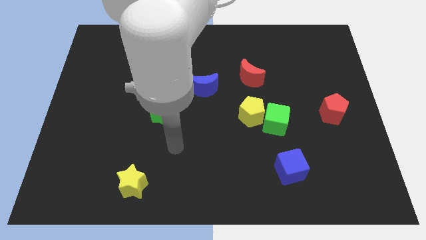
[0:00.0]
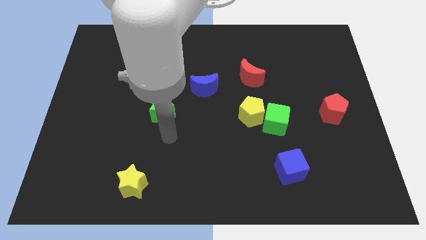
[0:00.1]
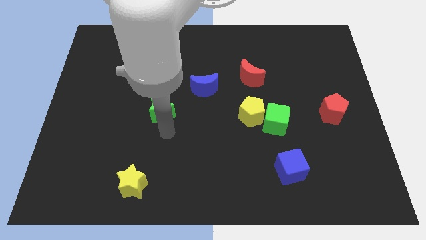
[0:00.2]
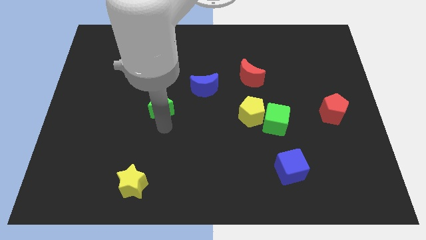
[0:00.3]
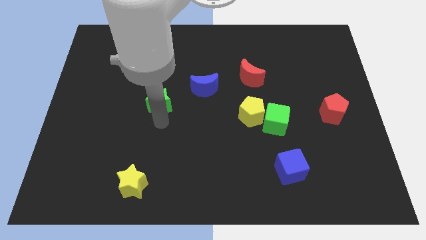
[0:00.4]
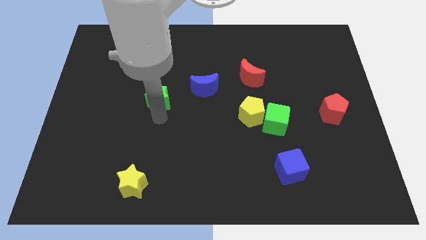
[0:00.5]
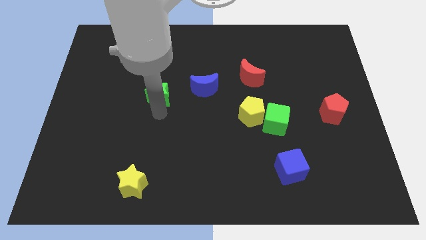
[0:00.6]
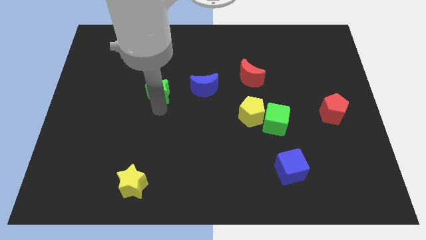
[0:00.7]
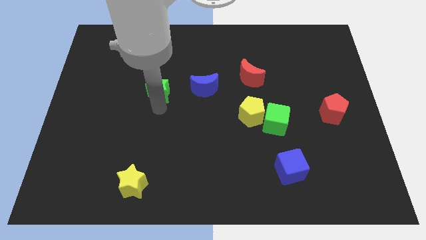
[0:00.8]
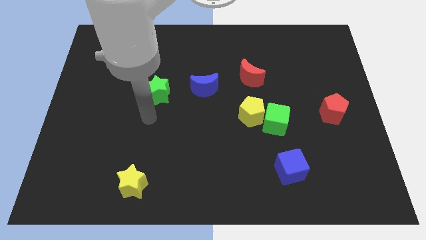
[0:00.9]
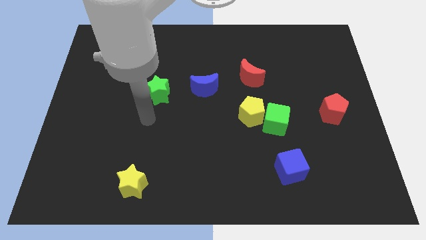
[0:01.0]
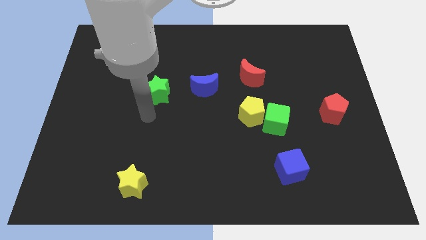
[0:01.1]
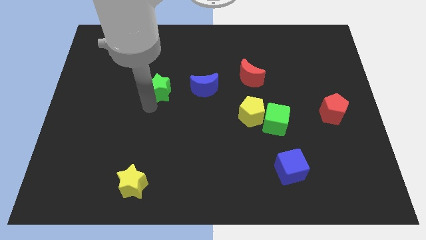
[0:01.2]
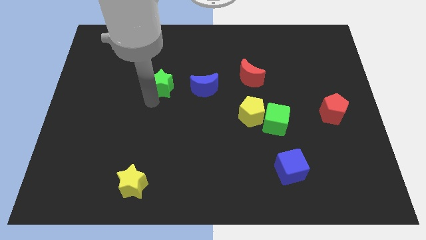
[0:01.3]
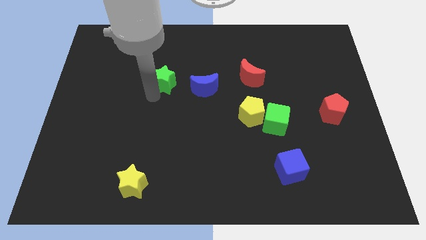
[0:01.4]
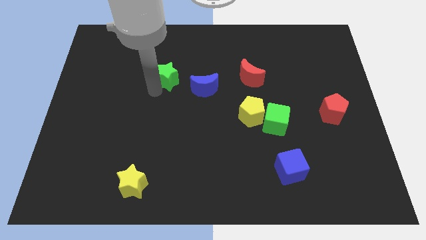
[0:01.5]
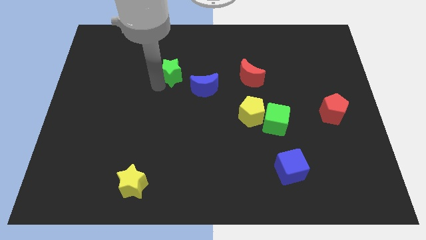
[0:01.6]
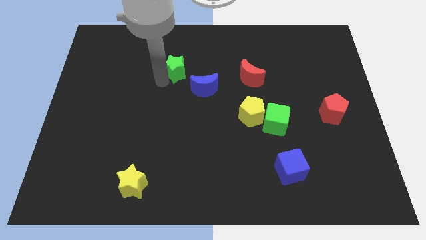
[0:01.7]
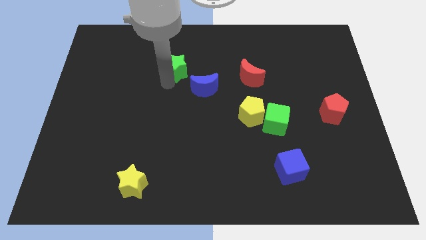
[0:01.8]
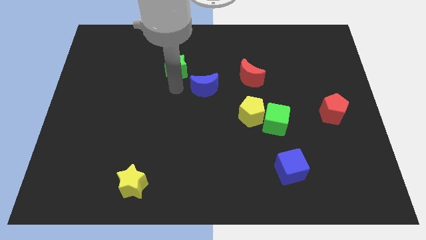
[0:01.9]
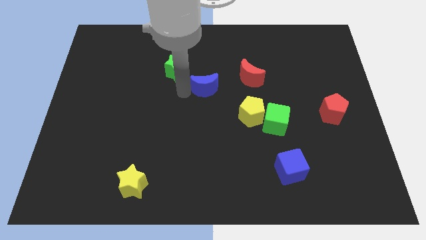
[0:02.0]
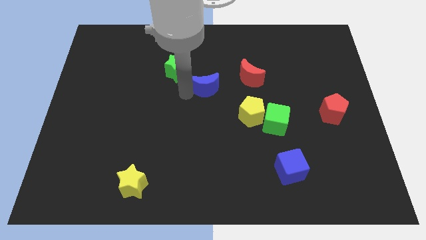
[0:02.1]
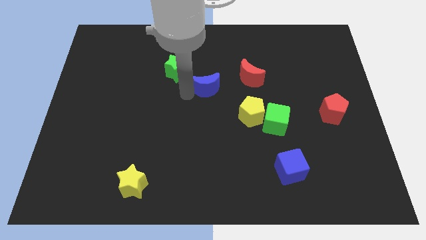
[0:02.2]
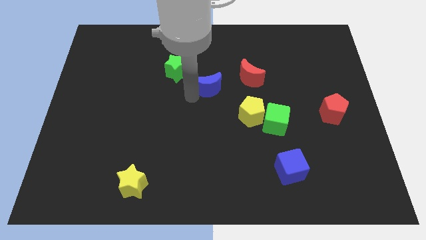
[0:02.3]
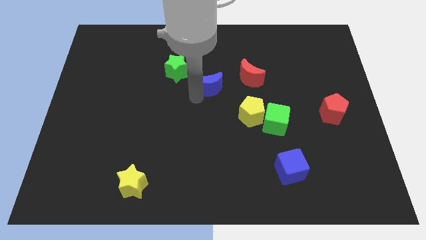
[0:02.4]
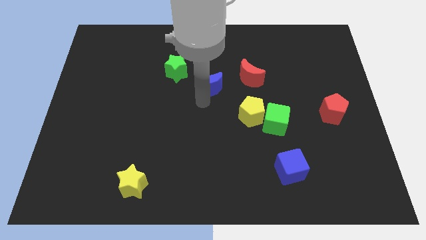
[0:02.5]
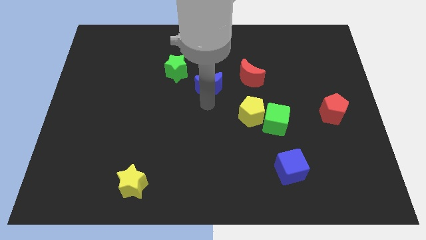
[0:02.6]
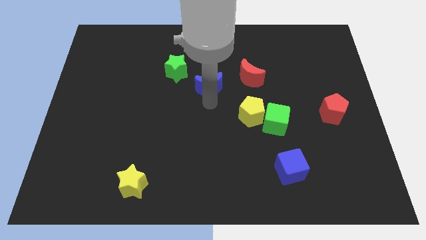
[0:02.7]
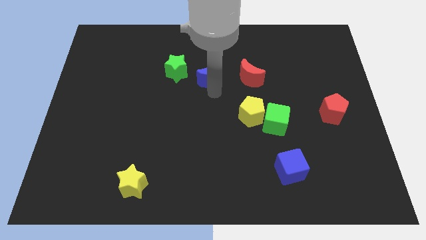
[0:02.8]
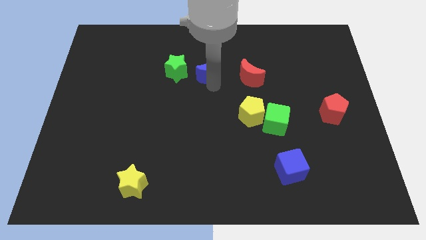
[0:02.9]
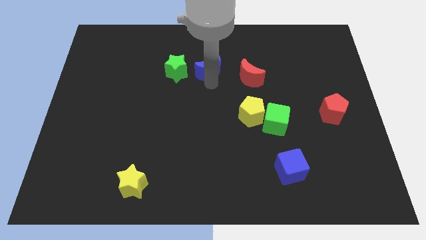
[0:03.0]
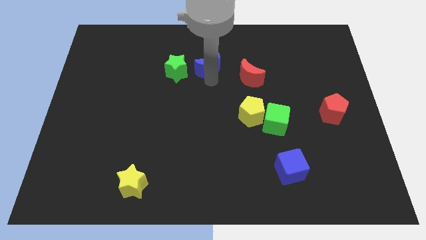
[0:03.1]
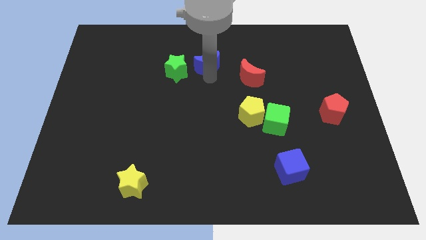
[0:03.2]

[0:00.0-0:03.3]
move the green star along with blue crescent parallel left to the red crescent

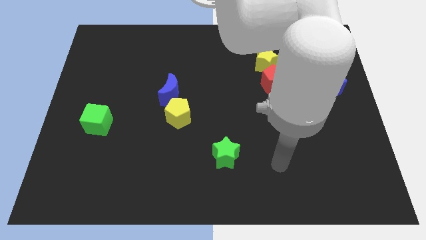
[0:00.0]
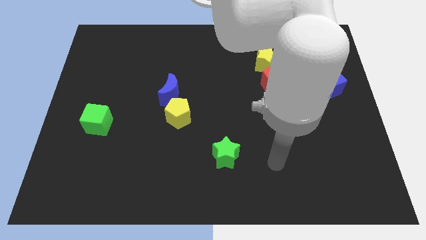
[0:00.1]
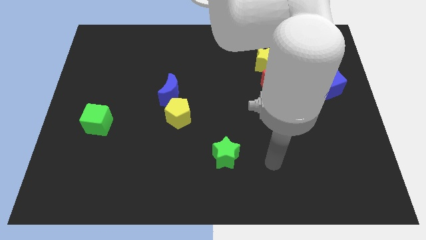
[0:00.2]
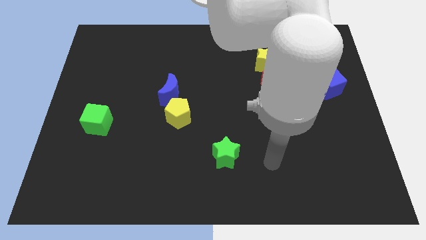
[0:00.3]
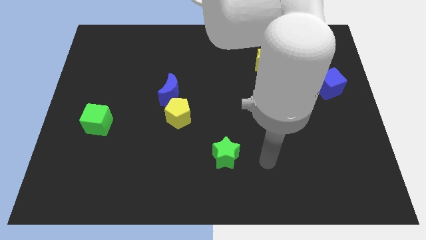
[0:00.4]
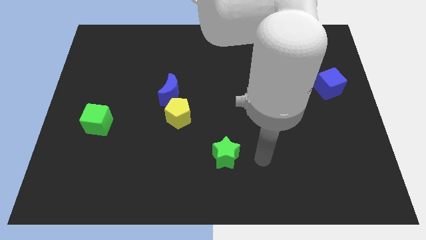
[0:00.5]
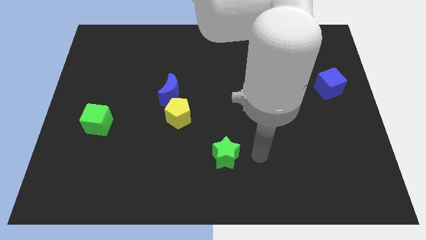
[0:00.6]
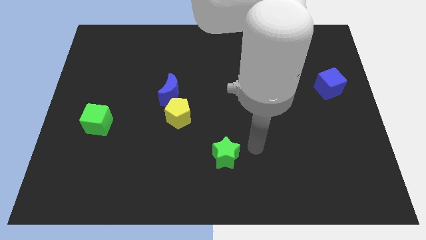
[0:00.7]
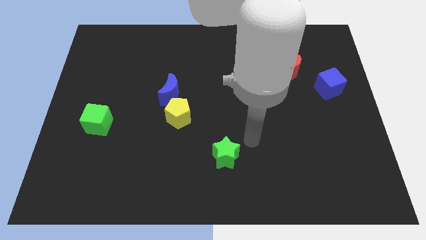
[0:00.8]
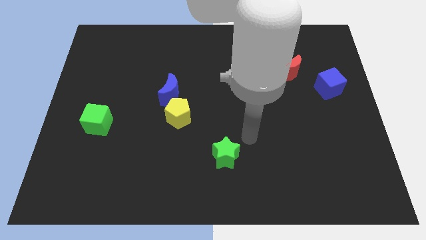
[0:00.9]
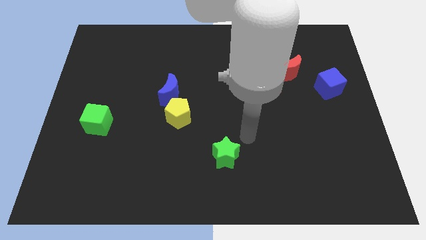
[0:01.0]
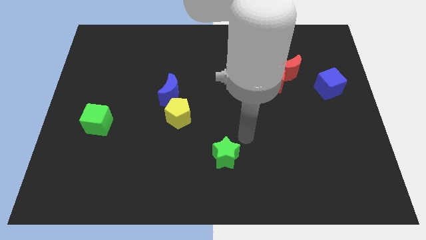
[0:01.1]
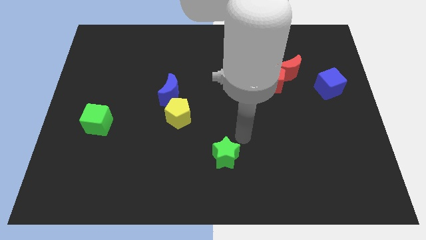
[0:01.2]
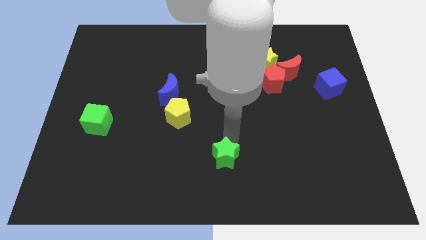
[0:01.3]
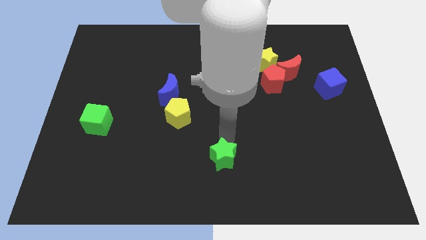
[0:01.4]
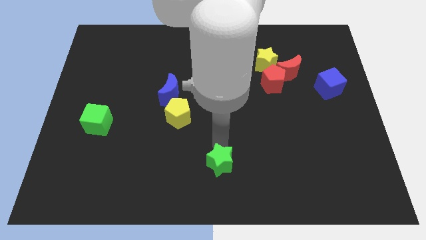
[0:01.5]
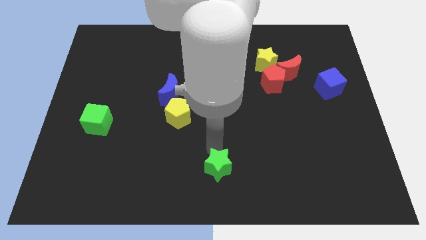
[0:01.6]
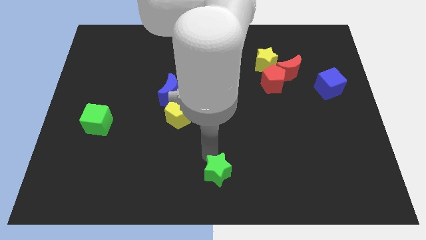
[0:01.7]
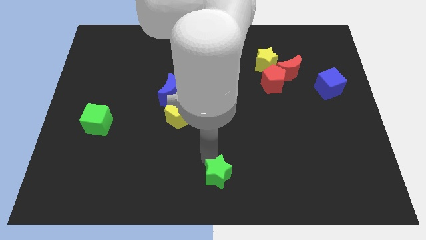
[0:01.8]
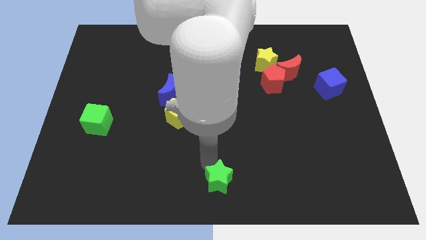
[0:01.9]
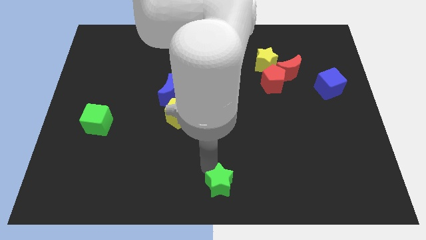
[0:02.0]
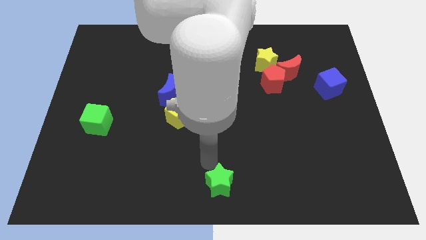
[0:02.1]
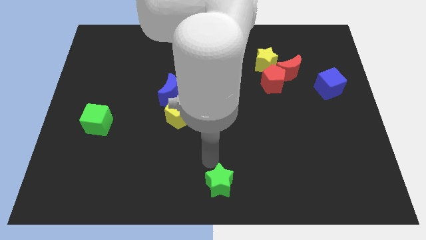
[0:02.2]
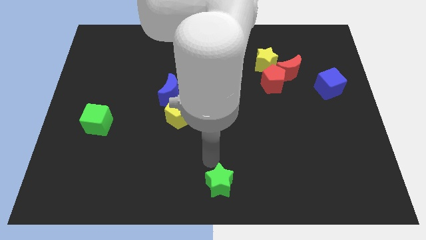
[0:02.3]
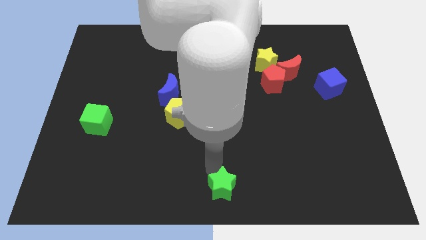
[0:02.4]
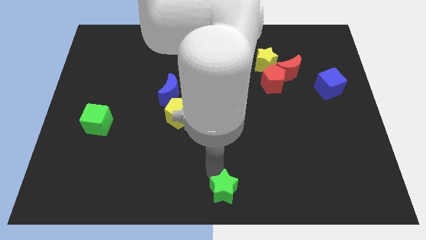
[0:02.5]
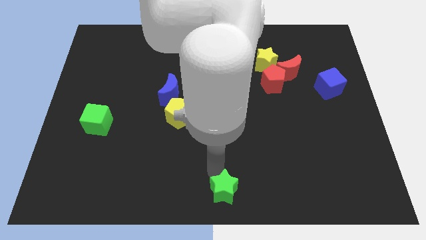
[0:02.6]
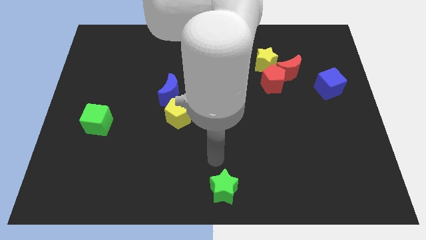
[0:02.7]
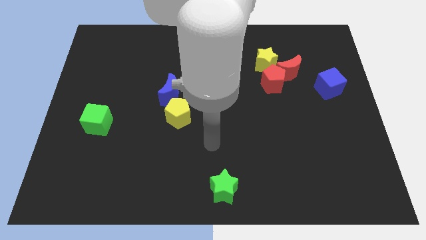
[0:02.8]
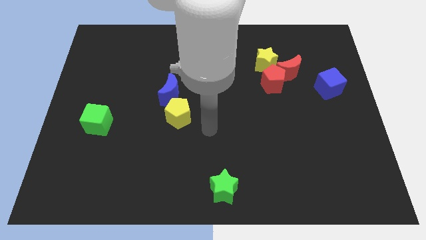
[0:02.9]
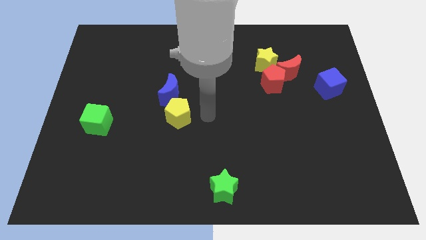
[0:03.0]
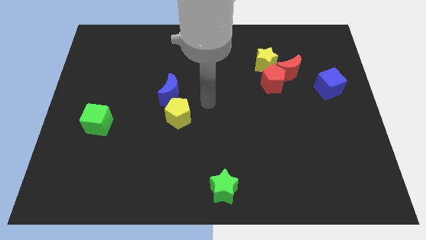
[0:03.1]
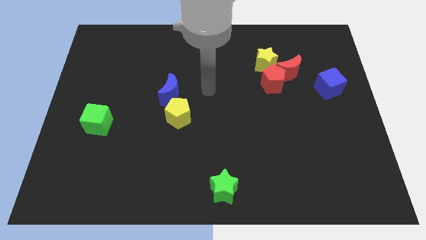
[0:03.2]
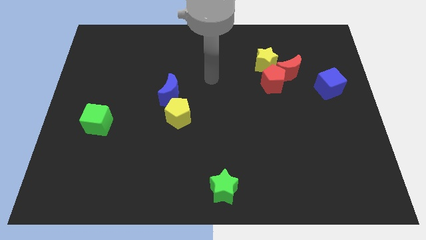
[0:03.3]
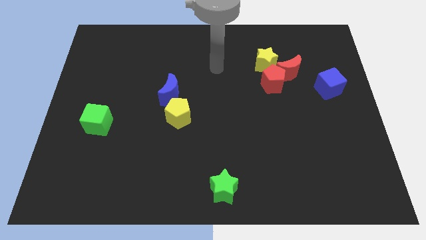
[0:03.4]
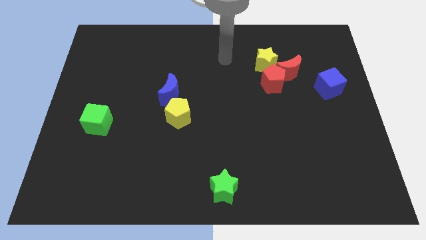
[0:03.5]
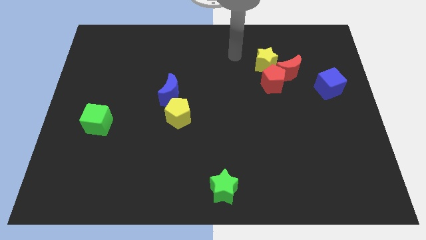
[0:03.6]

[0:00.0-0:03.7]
move the green star to the bottom center

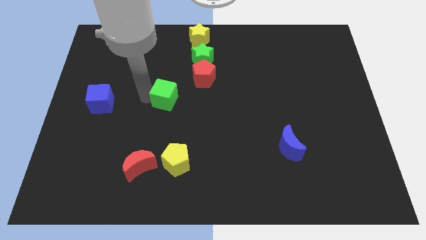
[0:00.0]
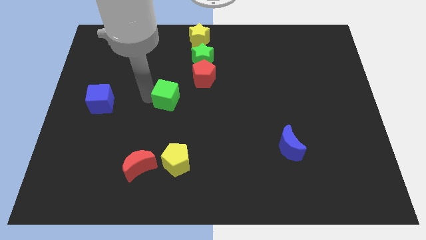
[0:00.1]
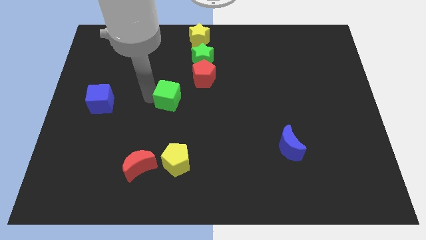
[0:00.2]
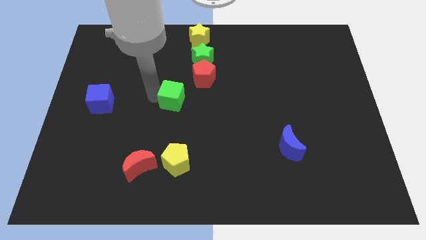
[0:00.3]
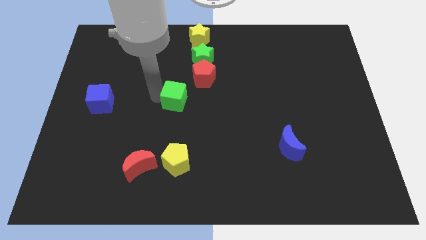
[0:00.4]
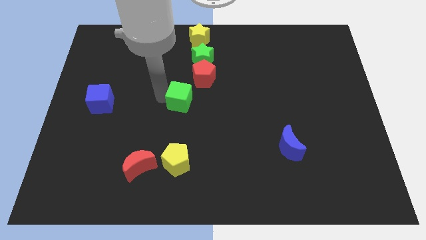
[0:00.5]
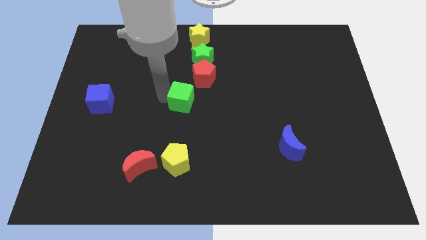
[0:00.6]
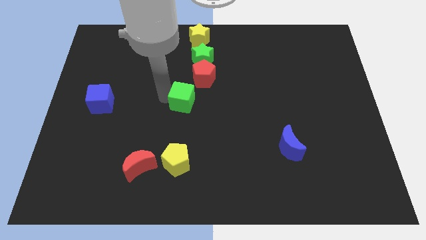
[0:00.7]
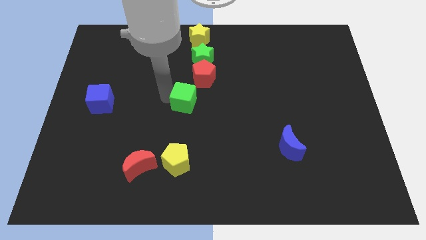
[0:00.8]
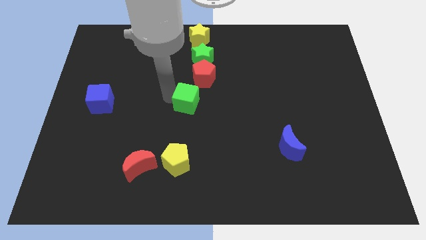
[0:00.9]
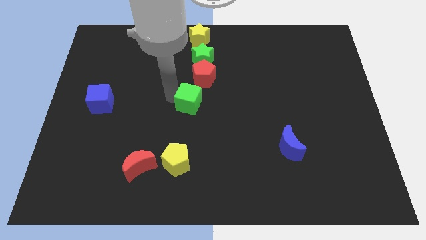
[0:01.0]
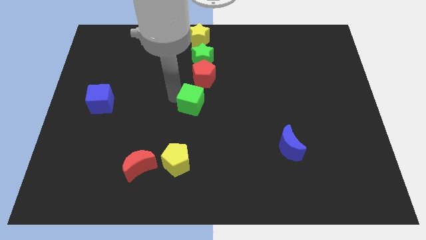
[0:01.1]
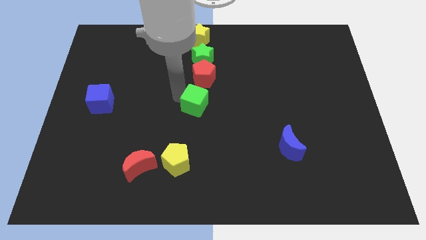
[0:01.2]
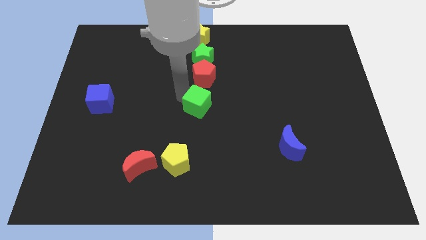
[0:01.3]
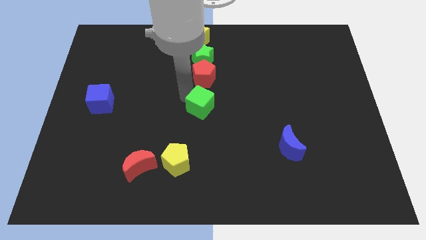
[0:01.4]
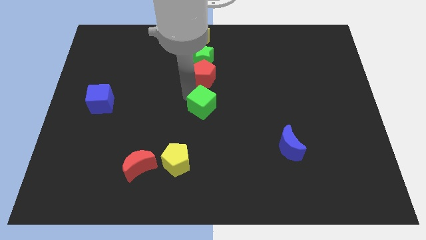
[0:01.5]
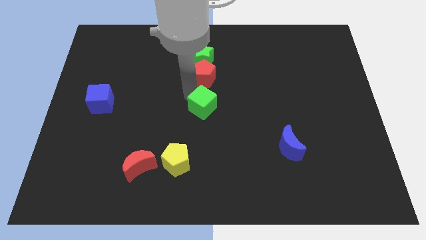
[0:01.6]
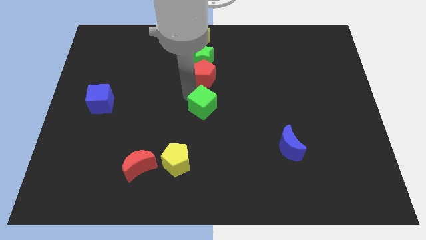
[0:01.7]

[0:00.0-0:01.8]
put the green cube at the bottom of red pentagon
